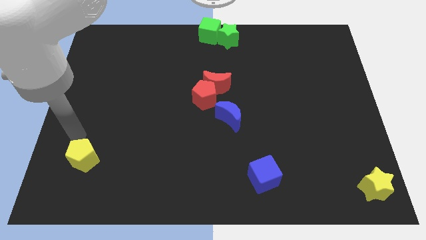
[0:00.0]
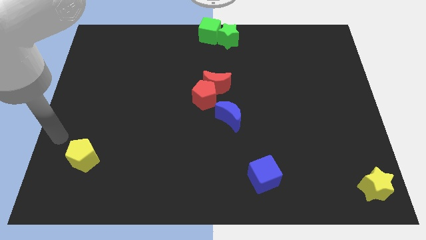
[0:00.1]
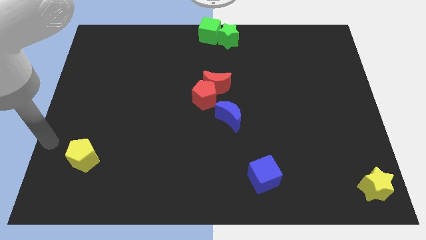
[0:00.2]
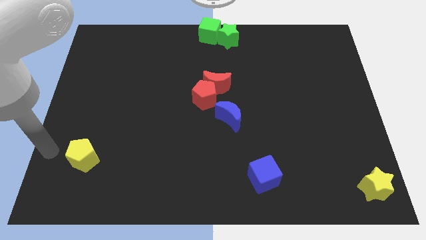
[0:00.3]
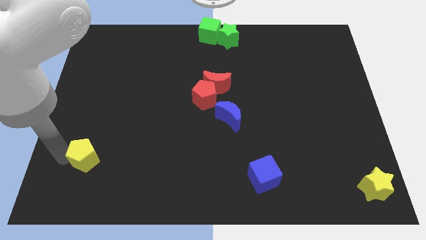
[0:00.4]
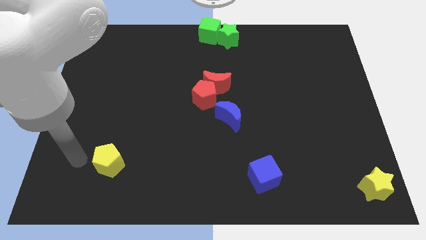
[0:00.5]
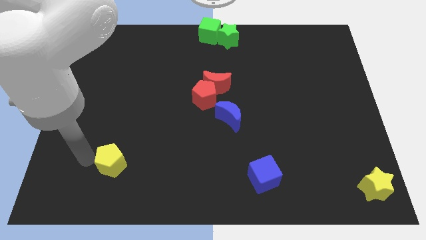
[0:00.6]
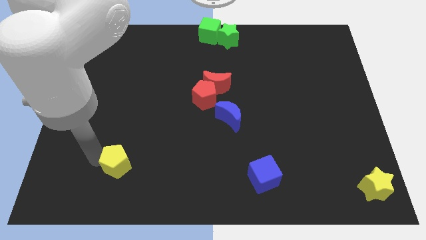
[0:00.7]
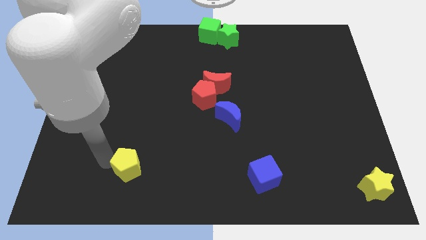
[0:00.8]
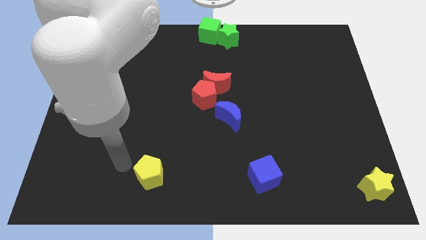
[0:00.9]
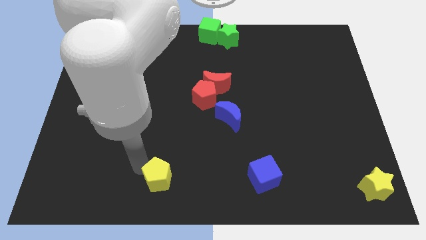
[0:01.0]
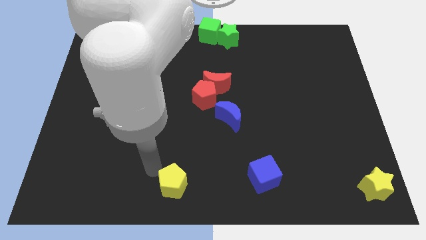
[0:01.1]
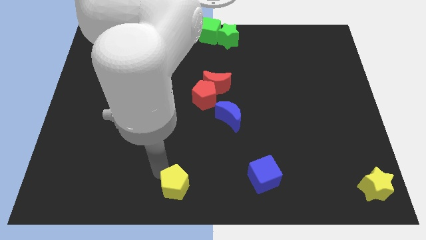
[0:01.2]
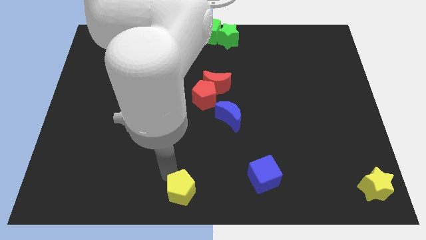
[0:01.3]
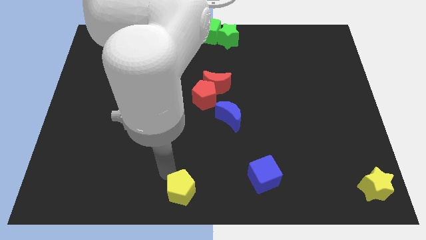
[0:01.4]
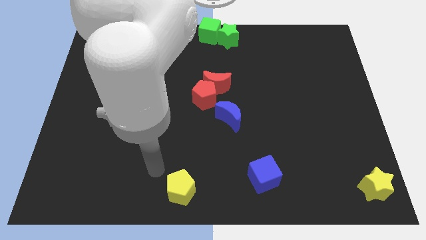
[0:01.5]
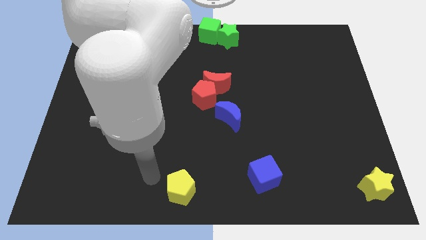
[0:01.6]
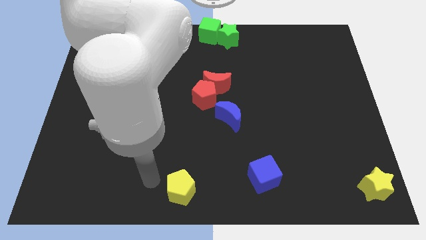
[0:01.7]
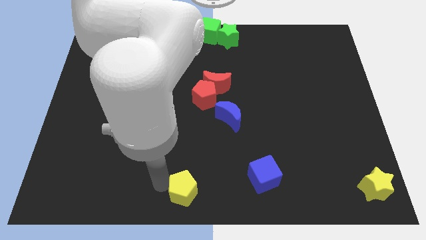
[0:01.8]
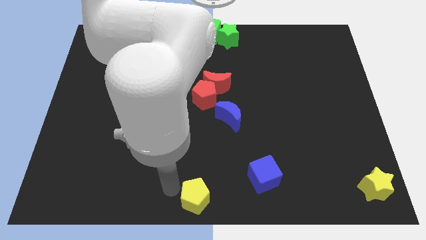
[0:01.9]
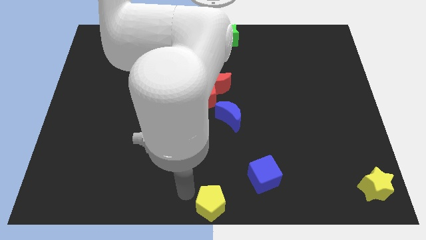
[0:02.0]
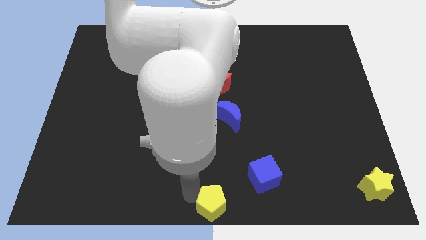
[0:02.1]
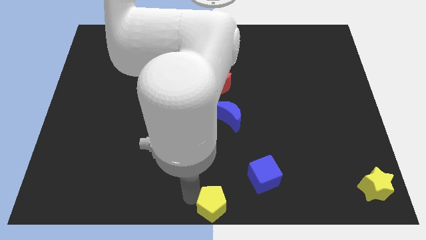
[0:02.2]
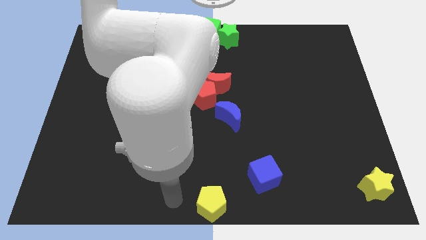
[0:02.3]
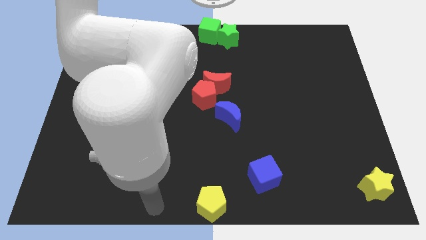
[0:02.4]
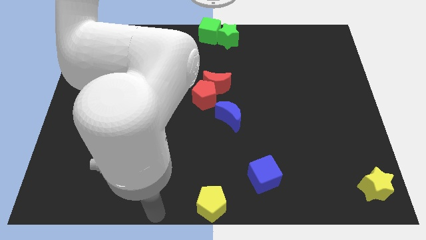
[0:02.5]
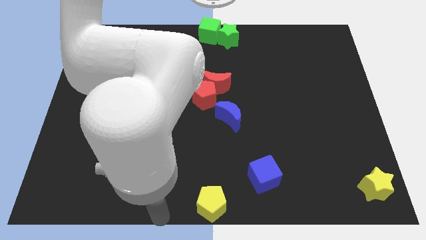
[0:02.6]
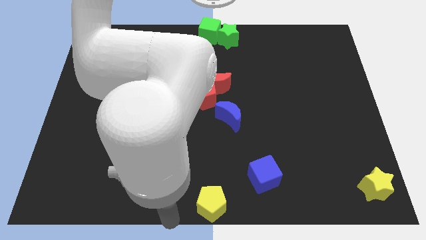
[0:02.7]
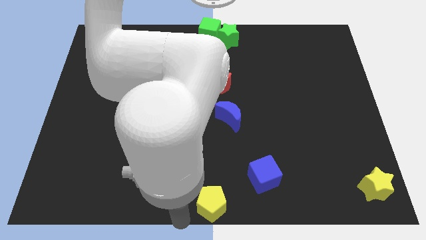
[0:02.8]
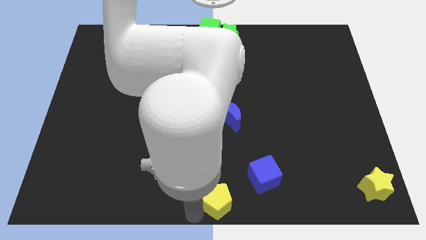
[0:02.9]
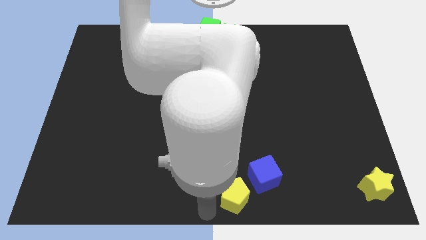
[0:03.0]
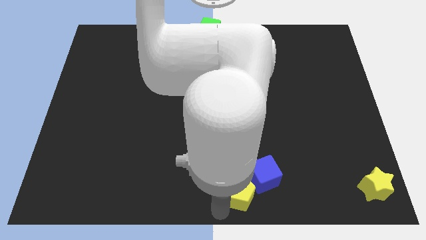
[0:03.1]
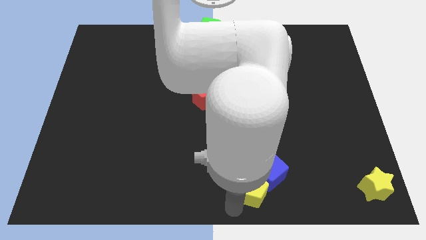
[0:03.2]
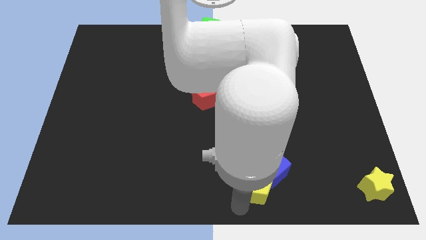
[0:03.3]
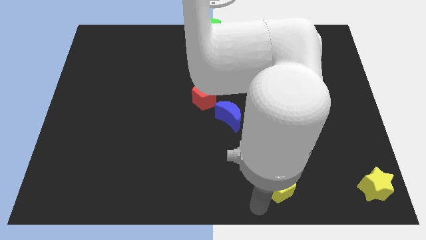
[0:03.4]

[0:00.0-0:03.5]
push the yellow pentagon into the blue cube

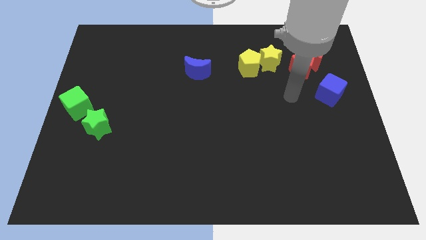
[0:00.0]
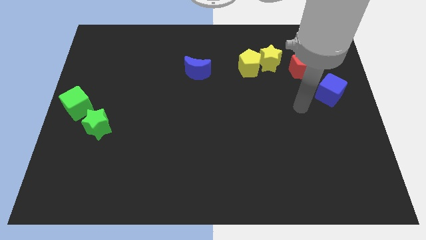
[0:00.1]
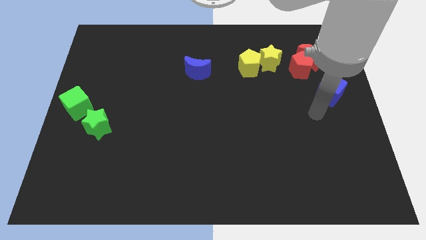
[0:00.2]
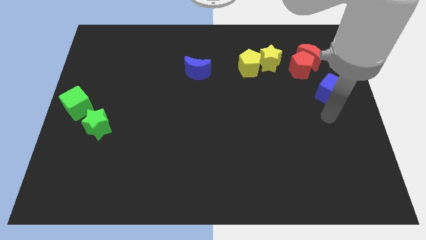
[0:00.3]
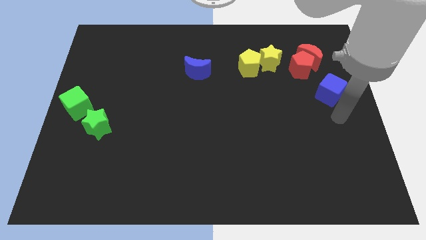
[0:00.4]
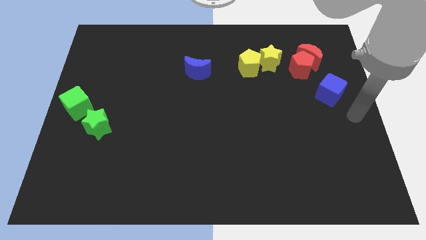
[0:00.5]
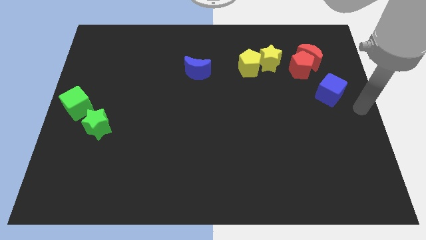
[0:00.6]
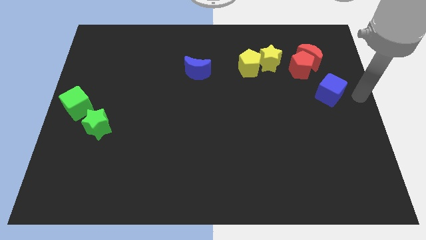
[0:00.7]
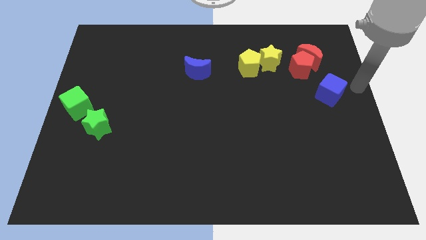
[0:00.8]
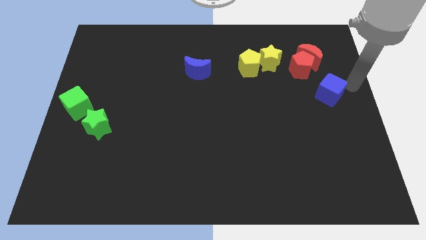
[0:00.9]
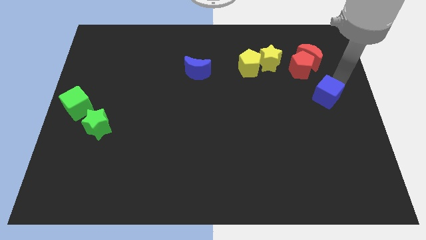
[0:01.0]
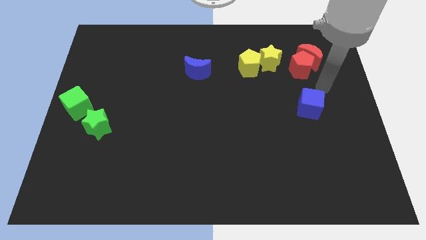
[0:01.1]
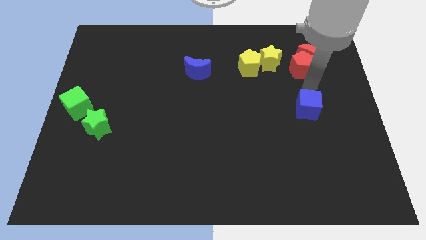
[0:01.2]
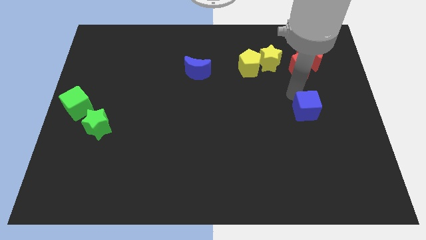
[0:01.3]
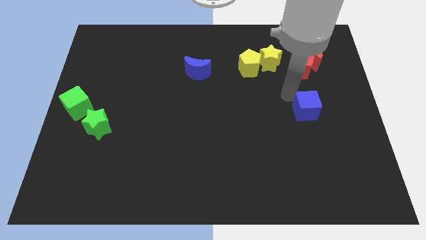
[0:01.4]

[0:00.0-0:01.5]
place the blue cube below the red pentagon

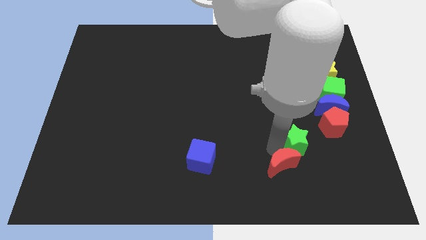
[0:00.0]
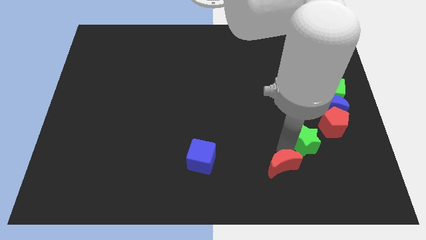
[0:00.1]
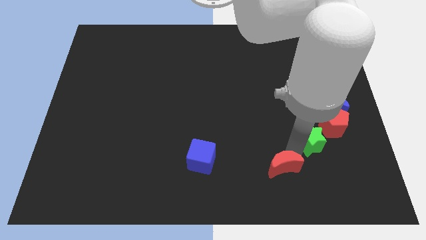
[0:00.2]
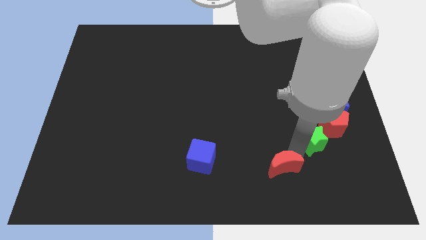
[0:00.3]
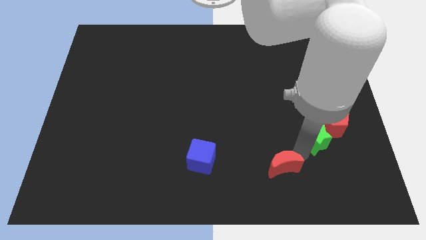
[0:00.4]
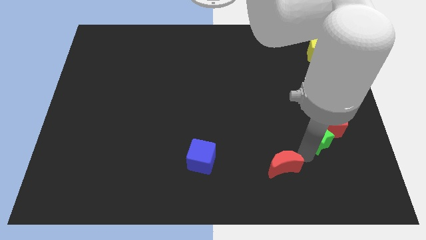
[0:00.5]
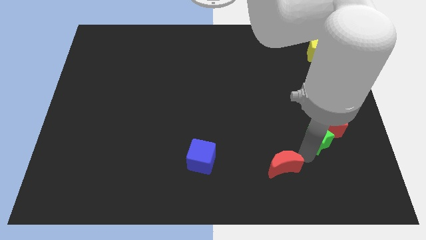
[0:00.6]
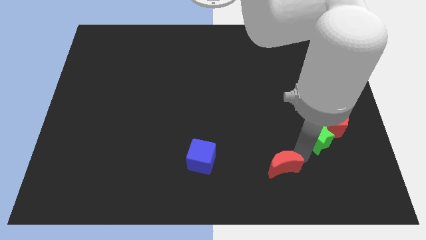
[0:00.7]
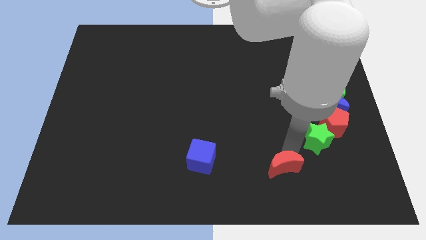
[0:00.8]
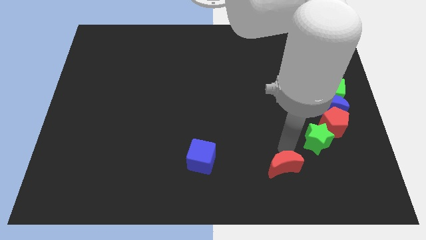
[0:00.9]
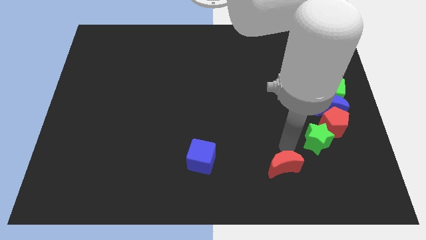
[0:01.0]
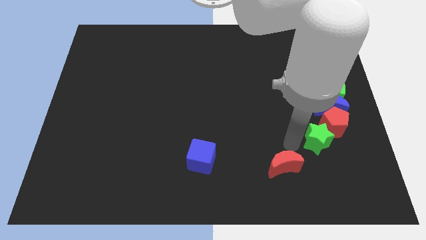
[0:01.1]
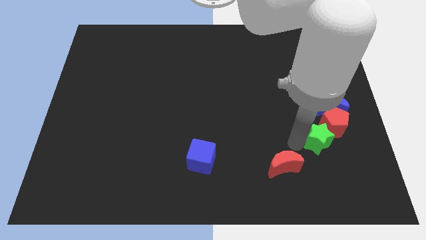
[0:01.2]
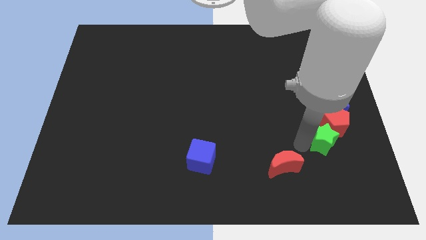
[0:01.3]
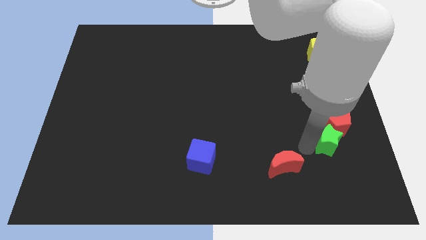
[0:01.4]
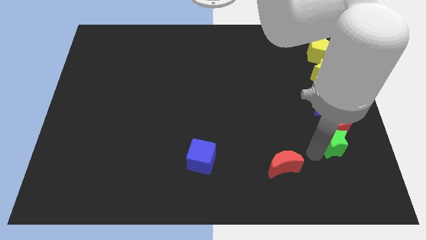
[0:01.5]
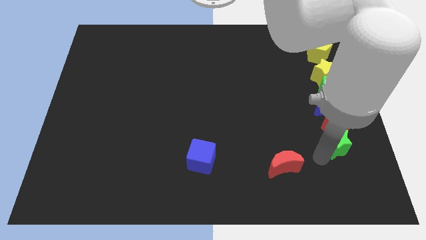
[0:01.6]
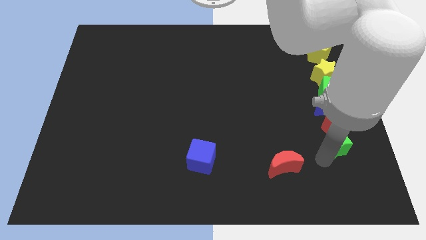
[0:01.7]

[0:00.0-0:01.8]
place the green star below the red pentagon

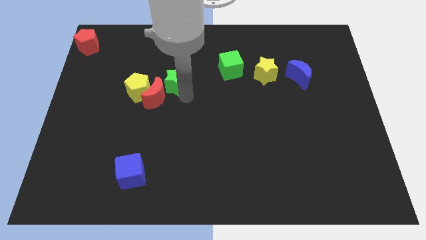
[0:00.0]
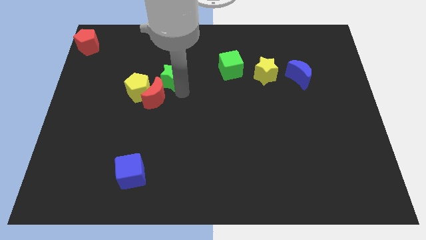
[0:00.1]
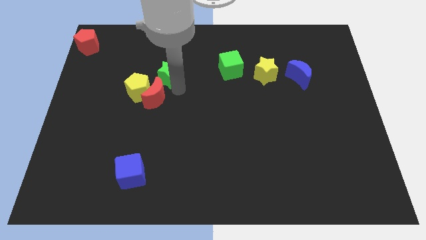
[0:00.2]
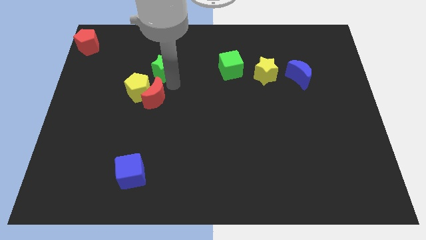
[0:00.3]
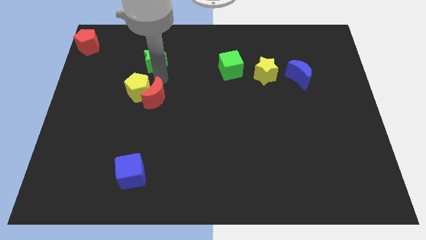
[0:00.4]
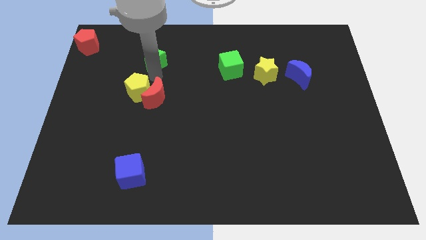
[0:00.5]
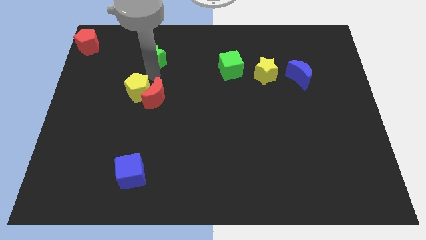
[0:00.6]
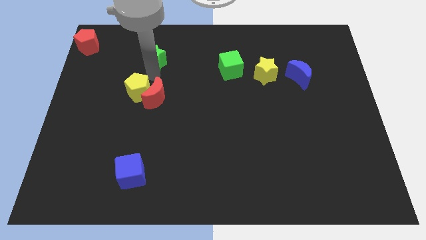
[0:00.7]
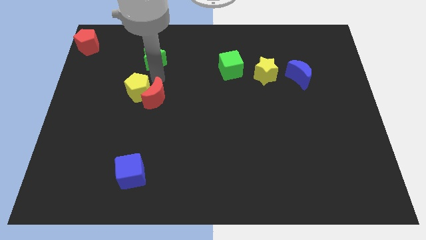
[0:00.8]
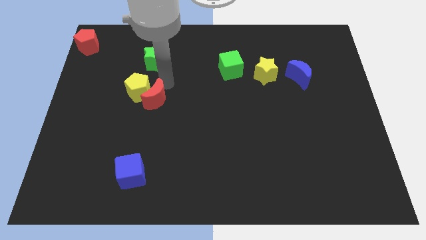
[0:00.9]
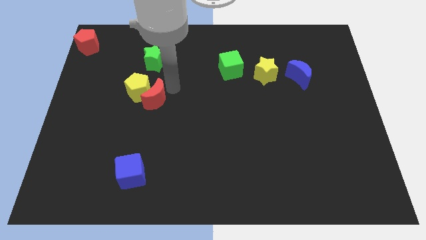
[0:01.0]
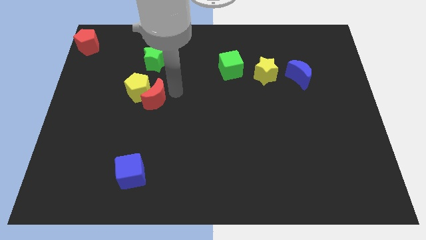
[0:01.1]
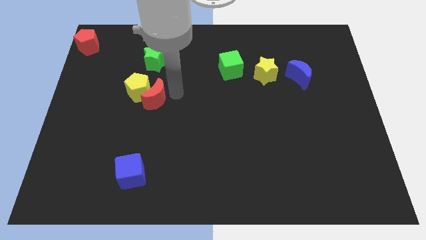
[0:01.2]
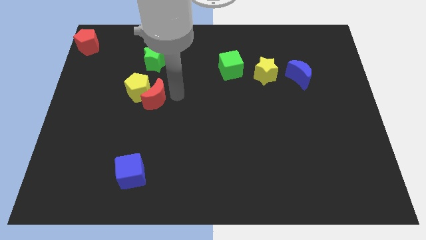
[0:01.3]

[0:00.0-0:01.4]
push the green star slightly to the top

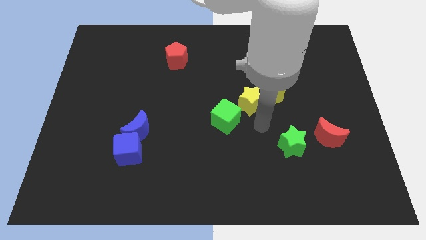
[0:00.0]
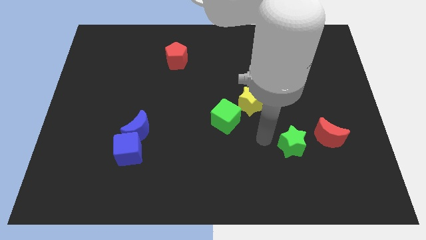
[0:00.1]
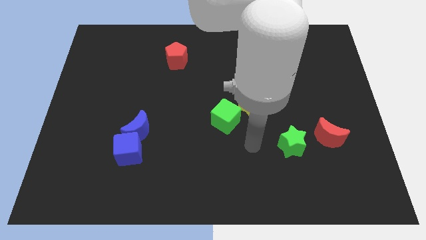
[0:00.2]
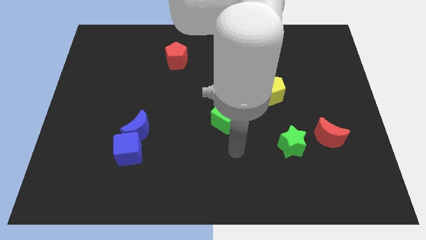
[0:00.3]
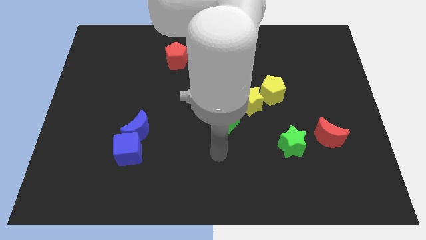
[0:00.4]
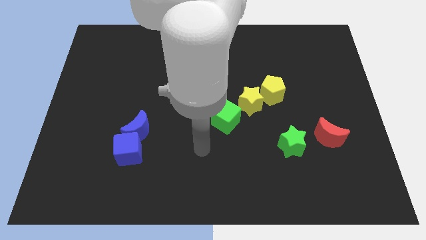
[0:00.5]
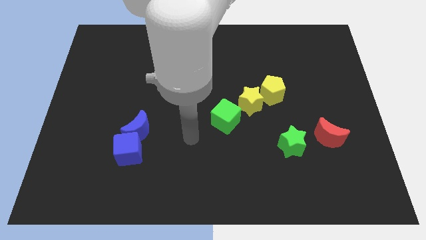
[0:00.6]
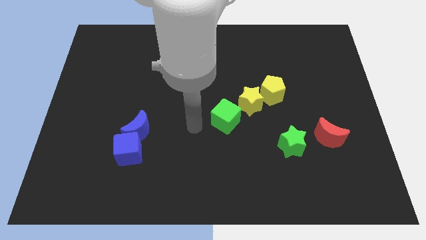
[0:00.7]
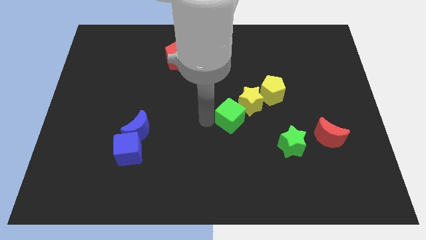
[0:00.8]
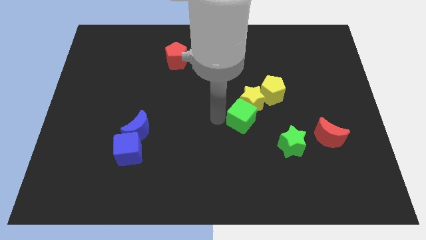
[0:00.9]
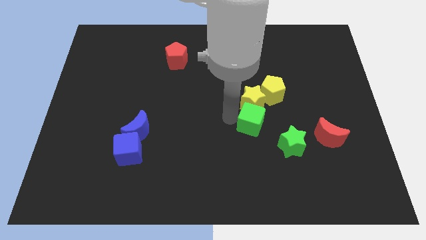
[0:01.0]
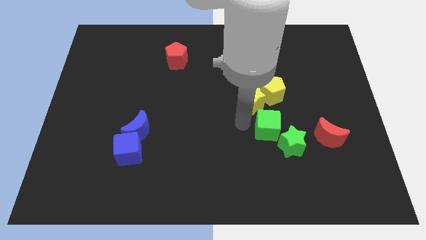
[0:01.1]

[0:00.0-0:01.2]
push the green cube towards the green star
